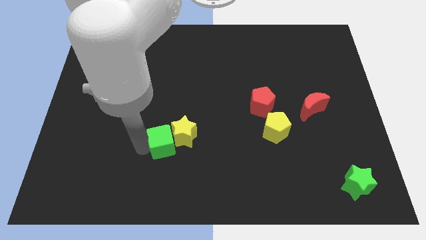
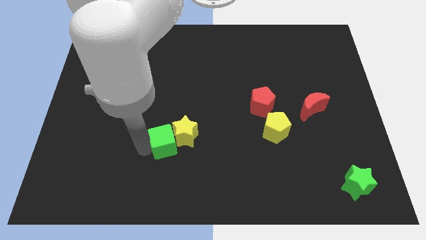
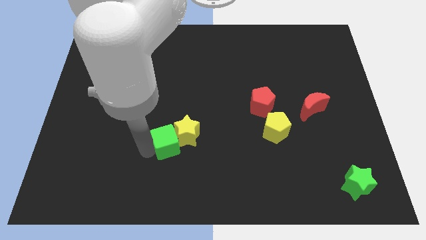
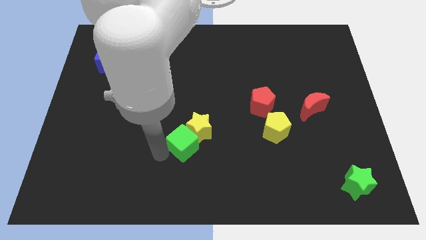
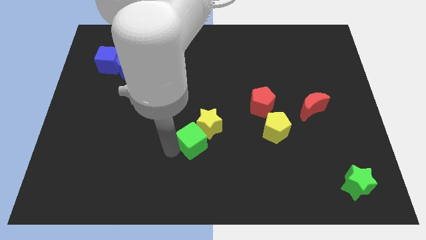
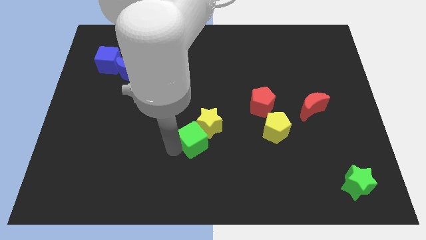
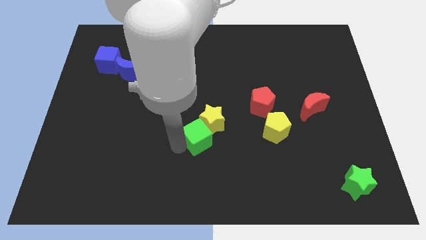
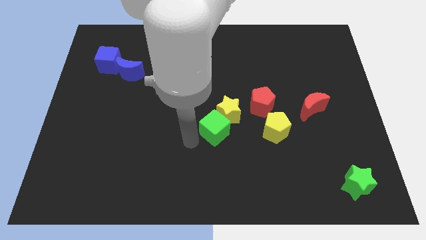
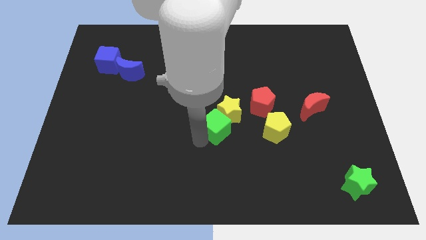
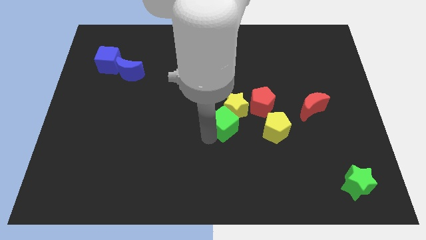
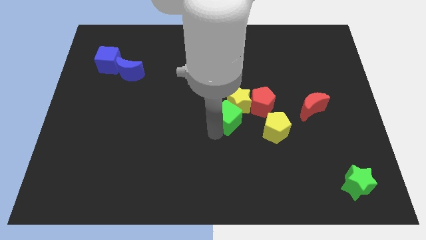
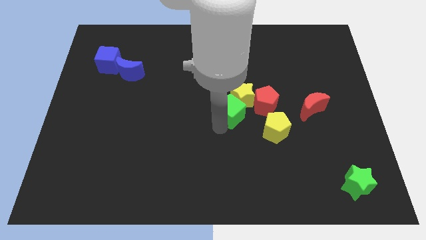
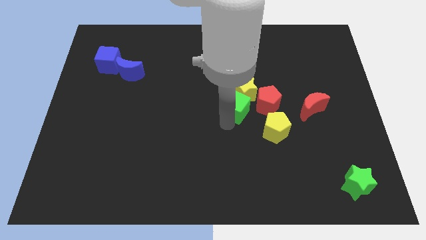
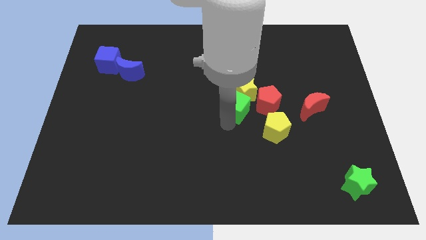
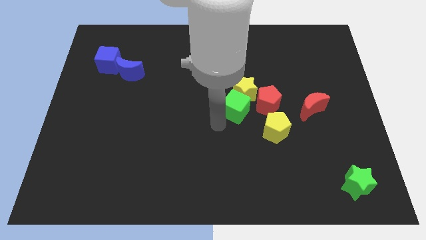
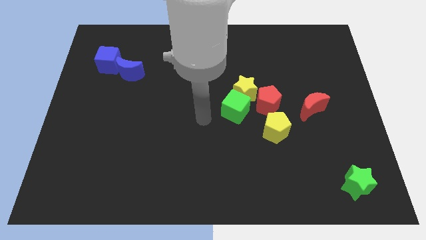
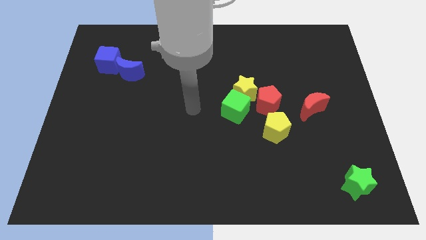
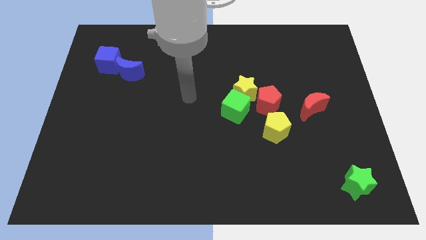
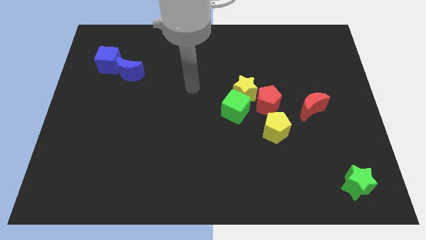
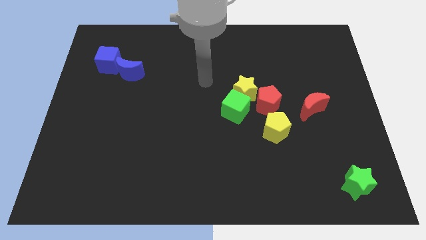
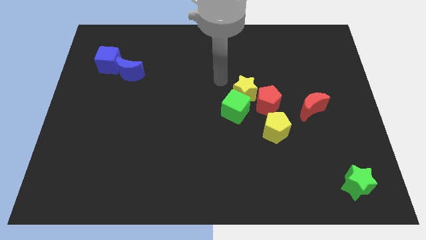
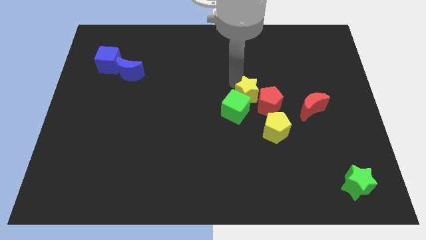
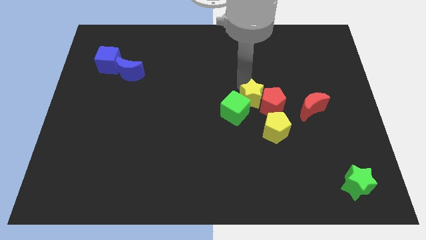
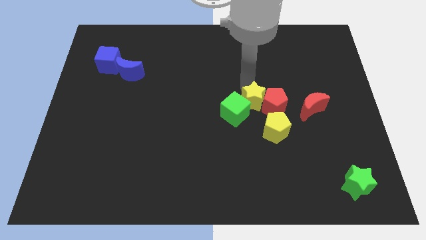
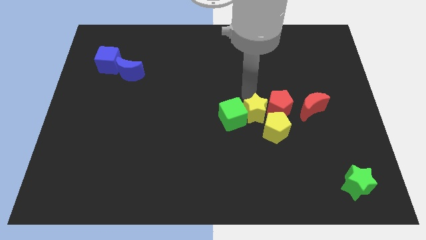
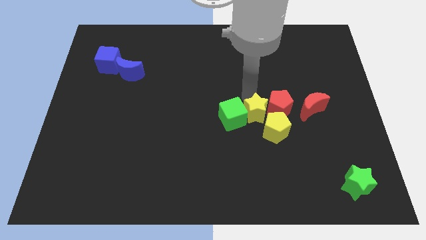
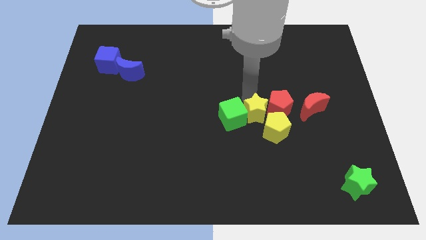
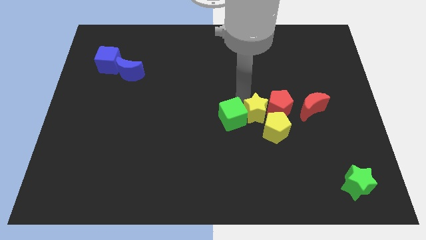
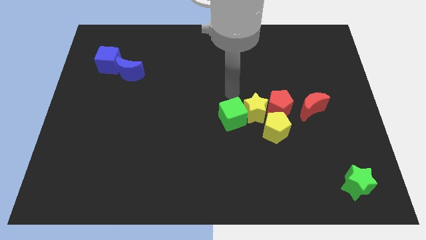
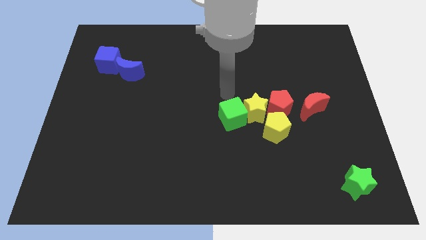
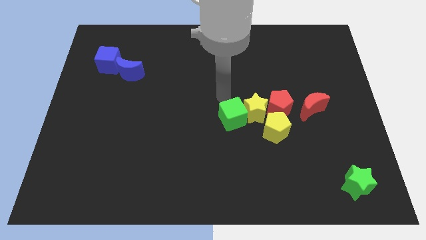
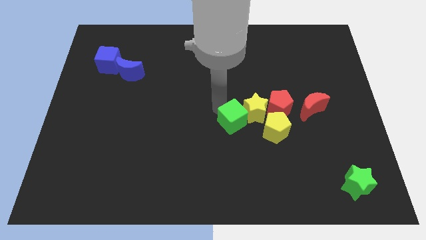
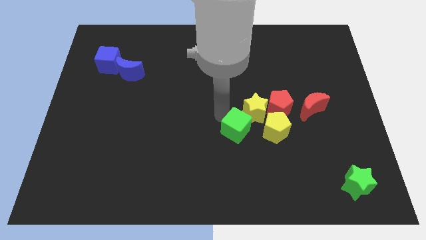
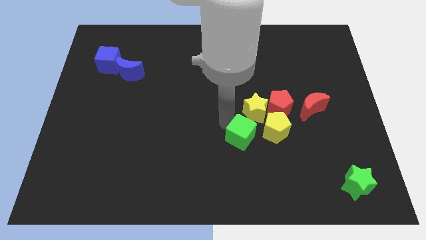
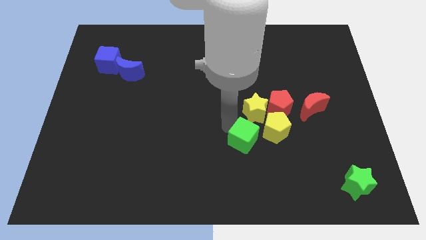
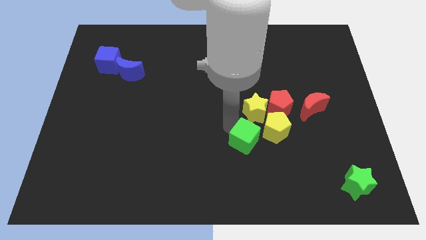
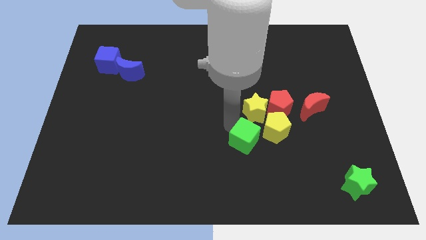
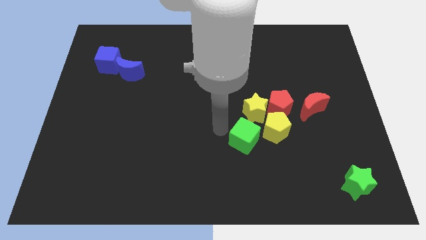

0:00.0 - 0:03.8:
put the green cube and yellow star to the left of the yellow pentagon

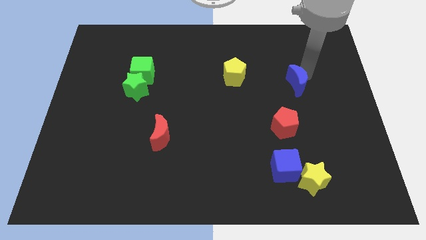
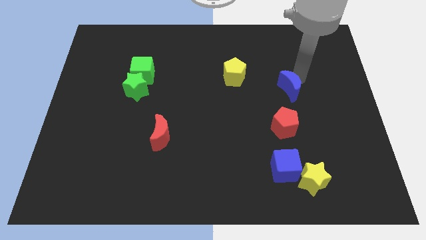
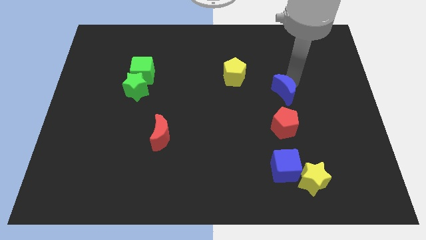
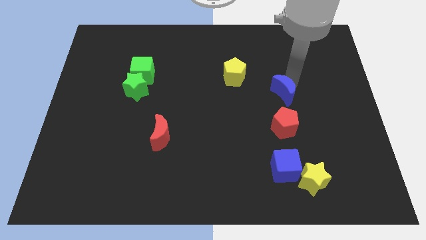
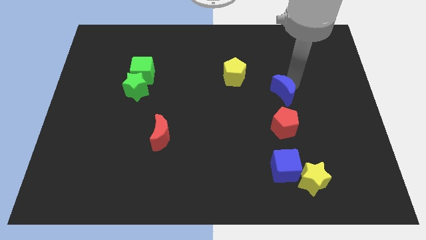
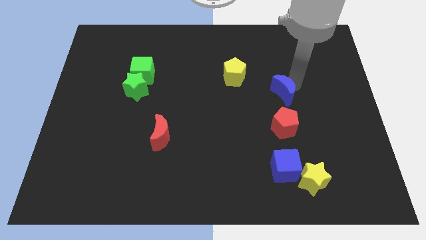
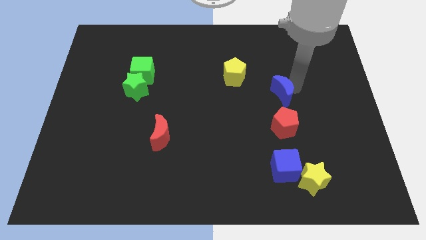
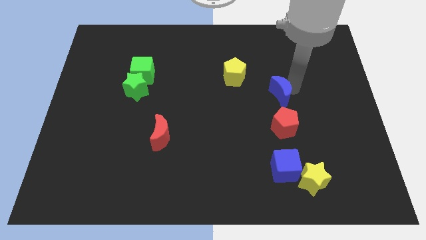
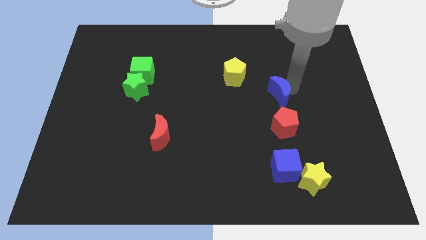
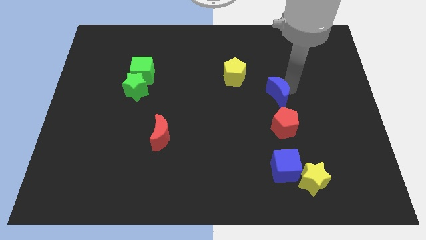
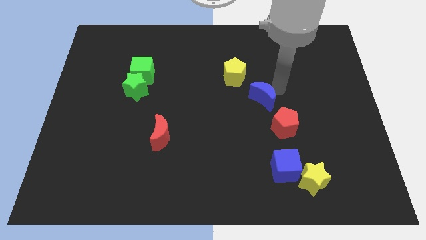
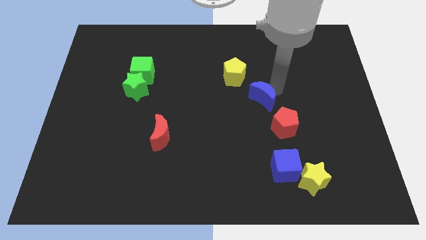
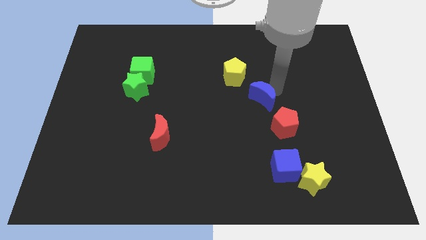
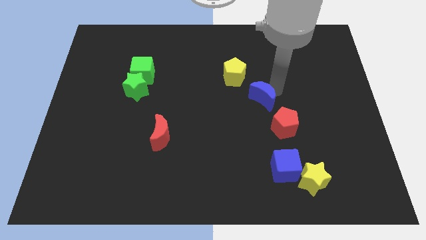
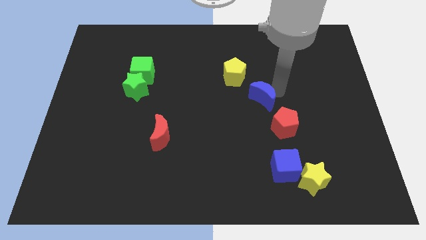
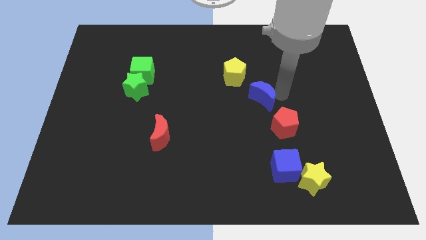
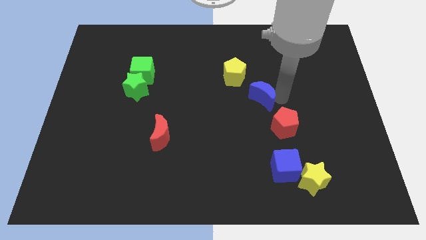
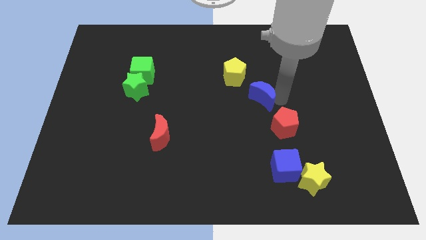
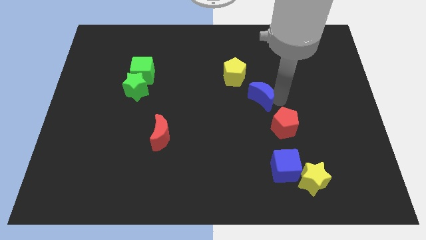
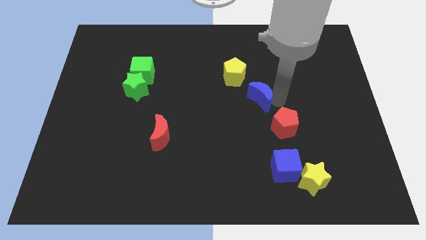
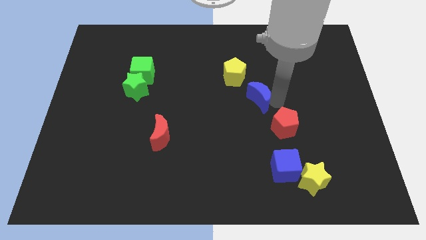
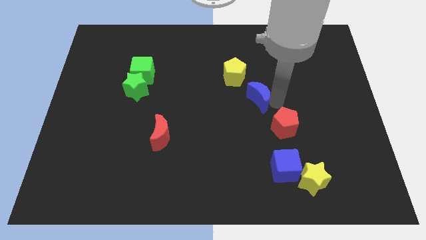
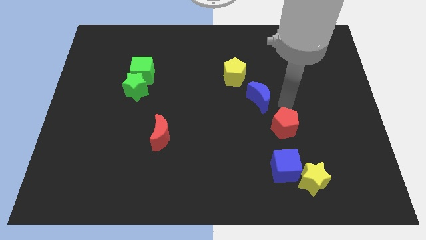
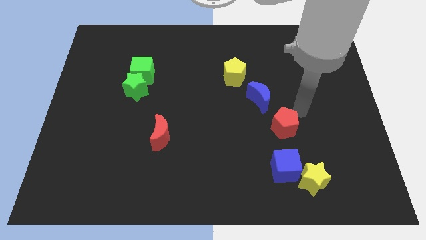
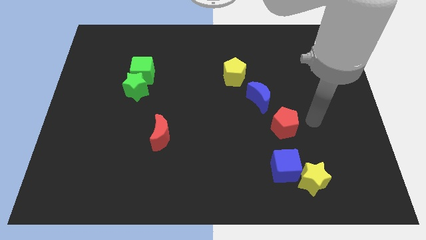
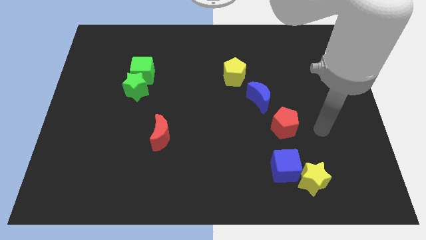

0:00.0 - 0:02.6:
place the blue crescent to the middle of red pentagon and yellow pentagon

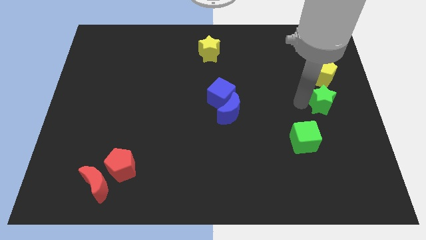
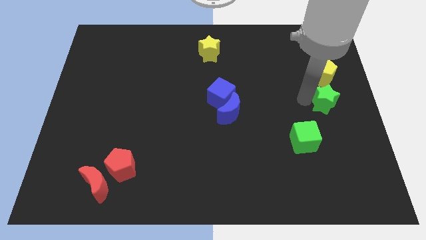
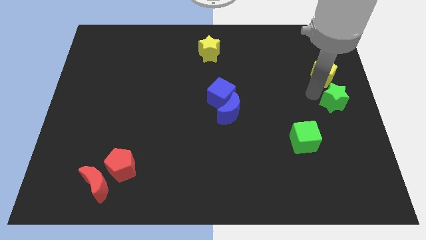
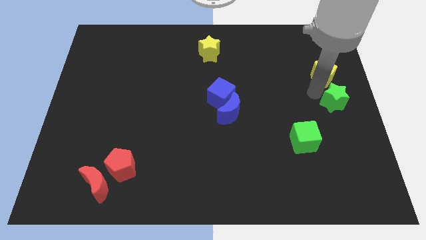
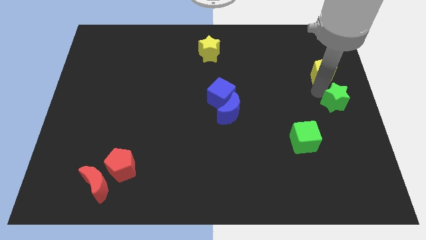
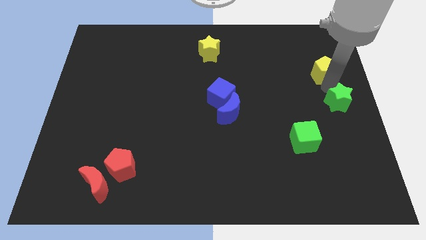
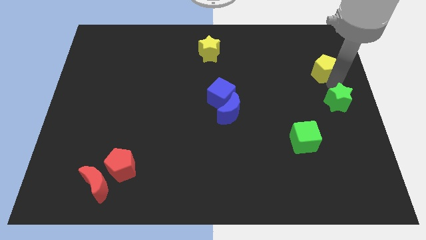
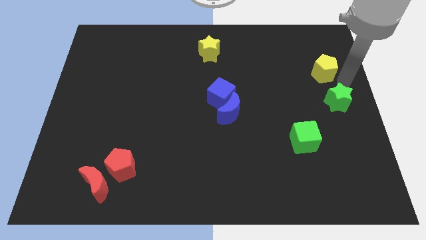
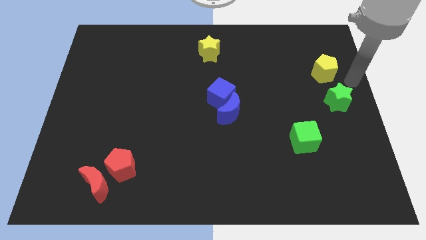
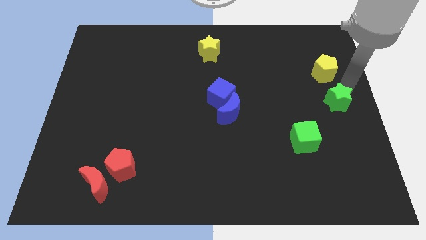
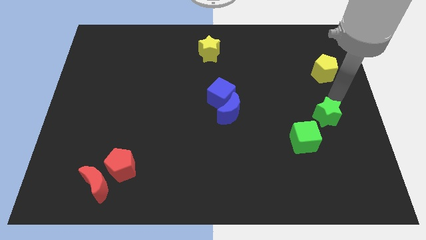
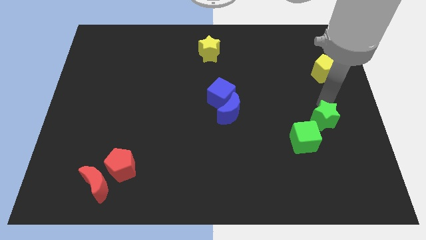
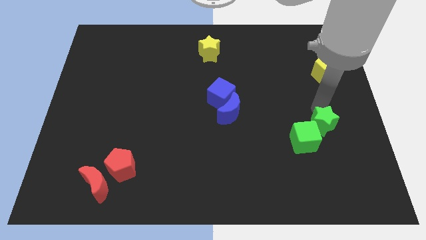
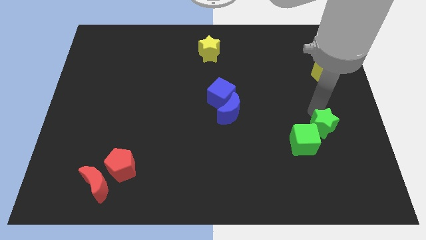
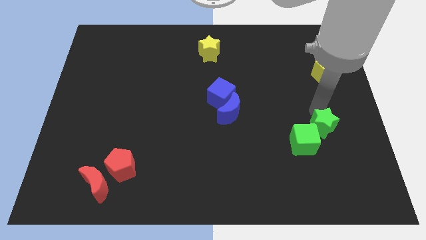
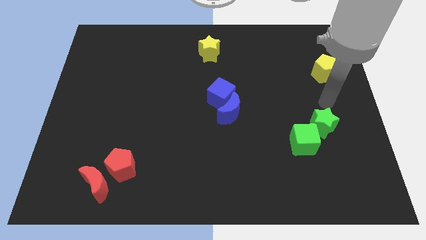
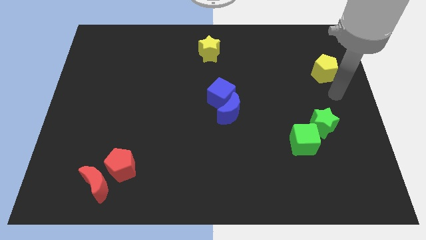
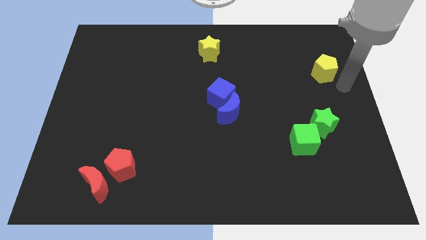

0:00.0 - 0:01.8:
slide the green star into the green cube

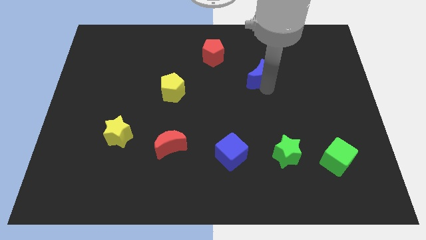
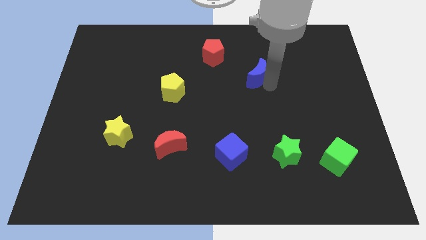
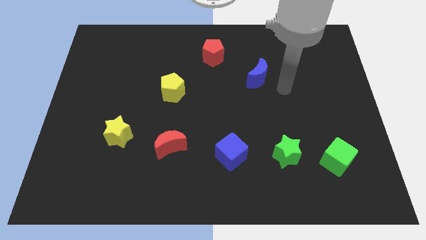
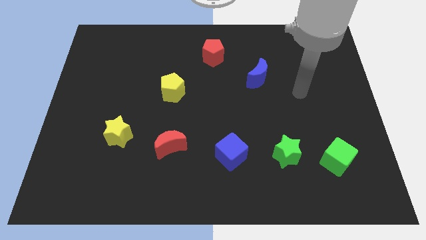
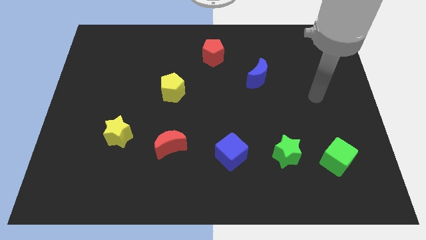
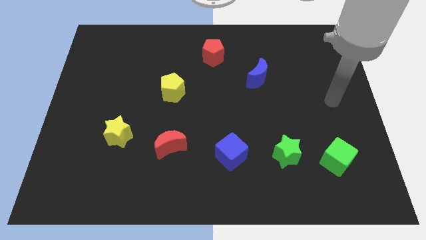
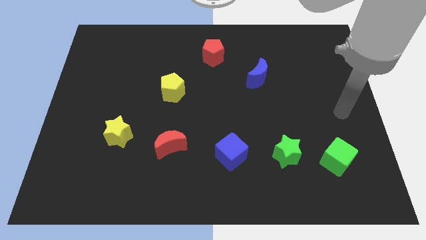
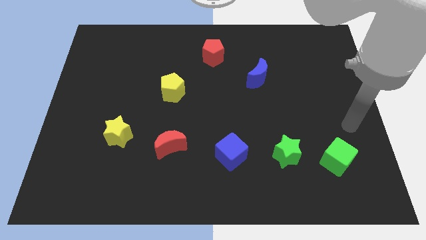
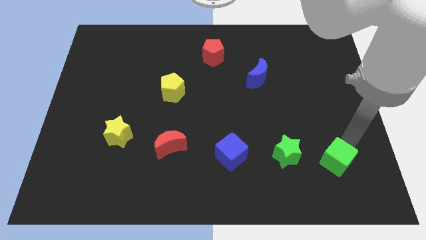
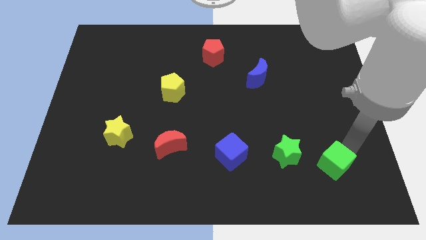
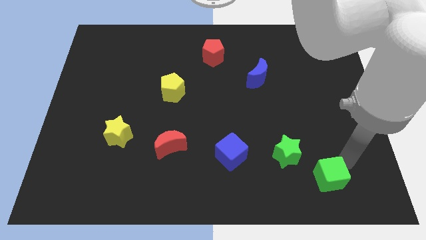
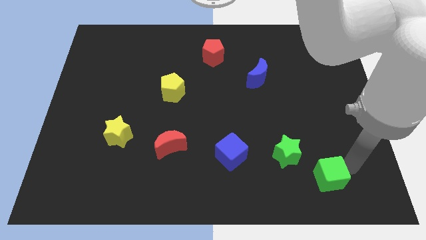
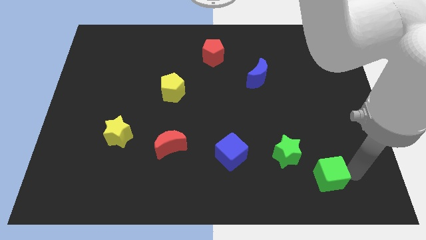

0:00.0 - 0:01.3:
move the green cube diagonally bottom right to the green star
